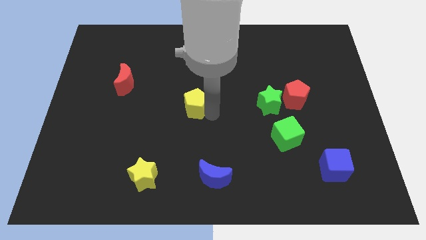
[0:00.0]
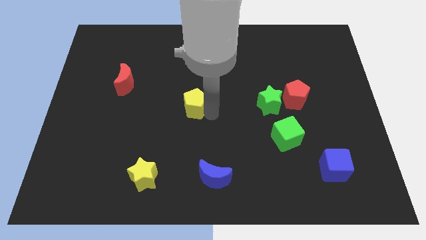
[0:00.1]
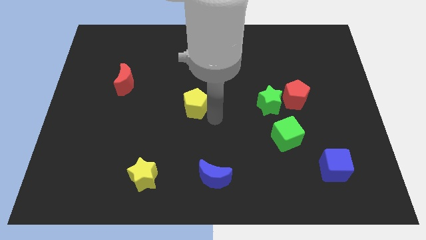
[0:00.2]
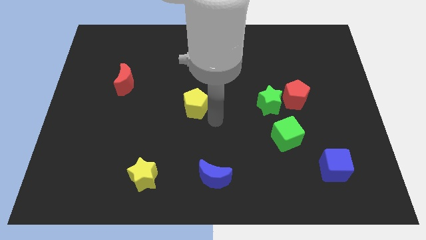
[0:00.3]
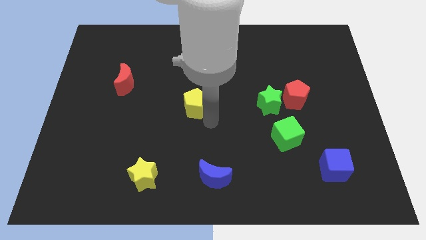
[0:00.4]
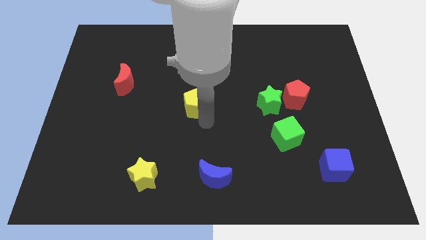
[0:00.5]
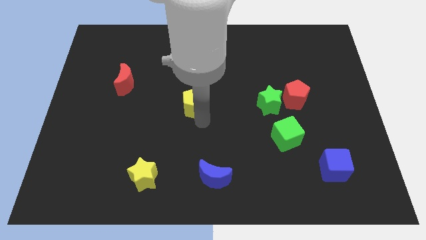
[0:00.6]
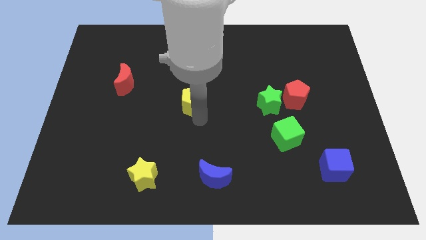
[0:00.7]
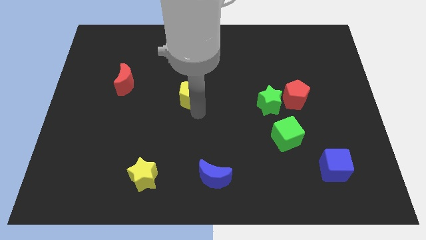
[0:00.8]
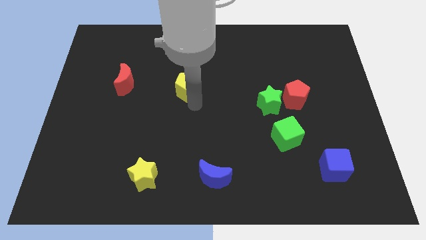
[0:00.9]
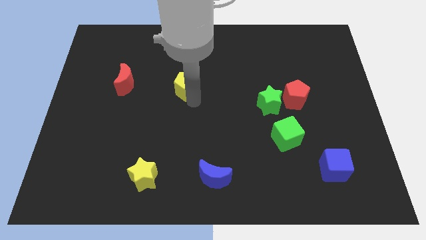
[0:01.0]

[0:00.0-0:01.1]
move the yellow pentagon right to the red moon

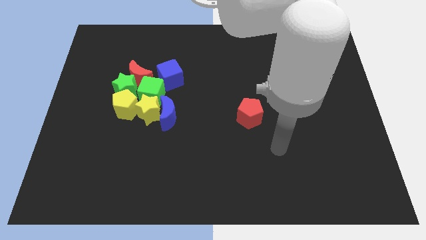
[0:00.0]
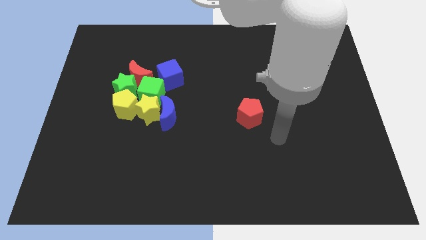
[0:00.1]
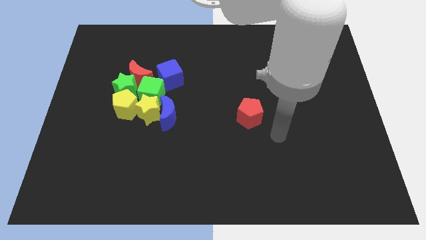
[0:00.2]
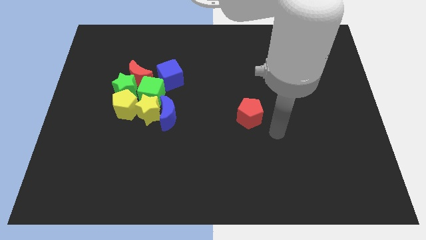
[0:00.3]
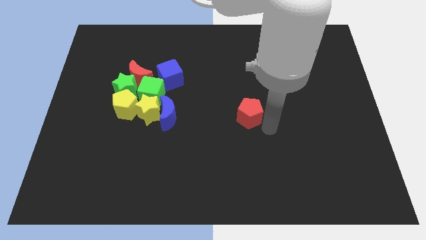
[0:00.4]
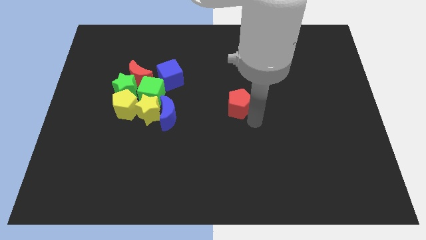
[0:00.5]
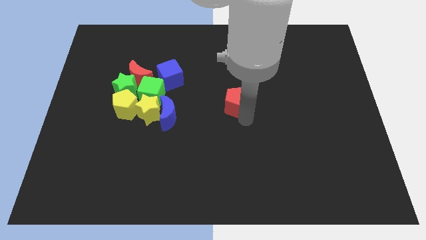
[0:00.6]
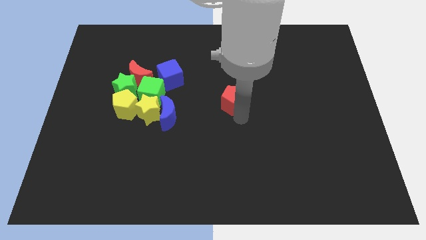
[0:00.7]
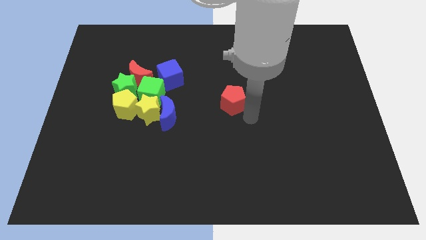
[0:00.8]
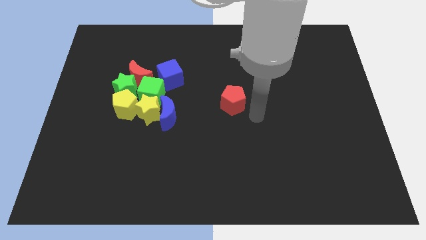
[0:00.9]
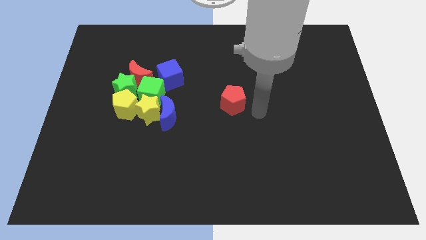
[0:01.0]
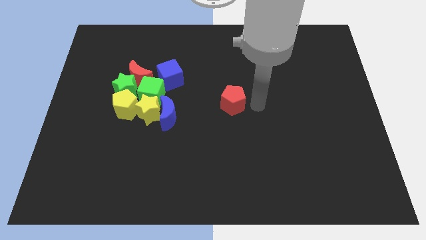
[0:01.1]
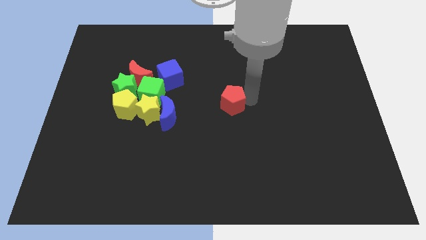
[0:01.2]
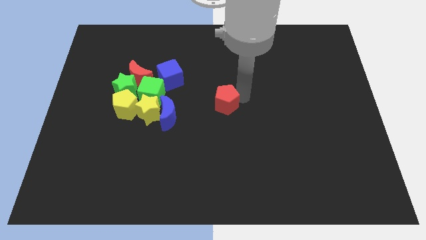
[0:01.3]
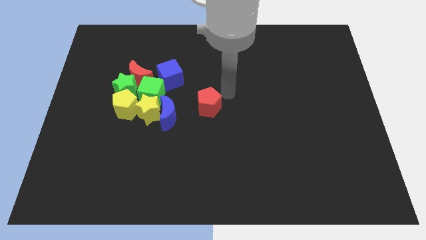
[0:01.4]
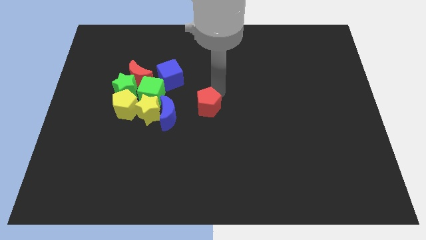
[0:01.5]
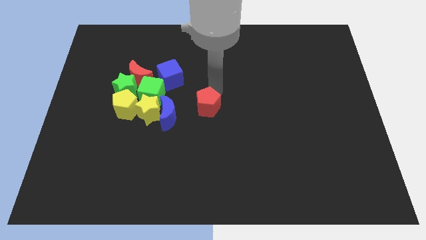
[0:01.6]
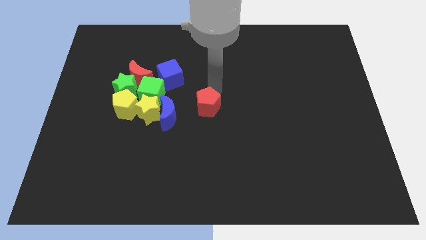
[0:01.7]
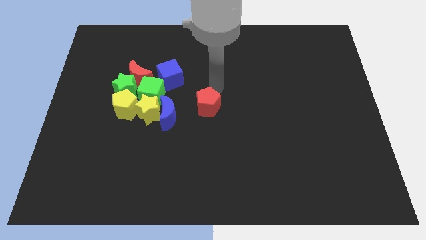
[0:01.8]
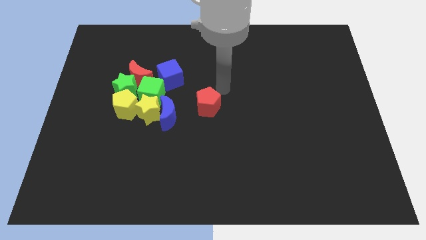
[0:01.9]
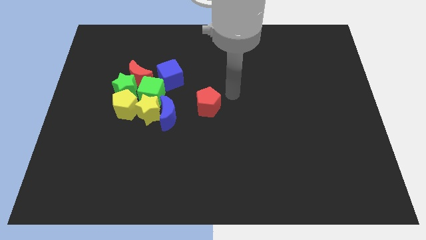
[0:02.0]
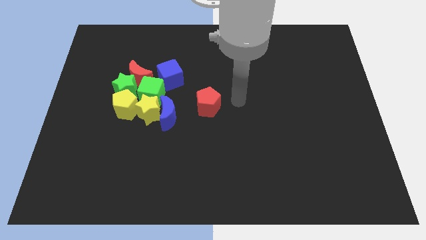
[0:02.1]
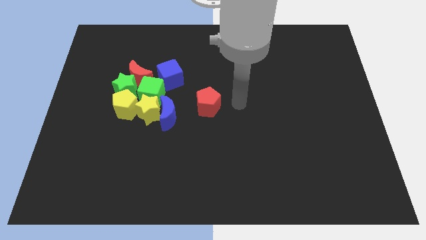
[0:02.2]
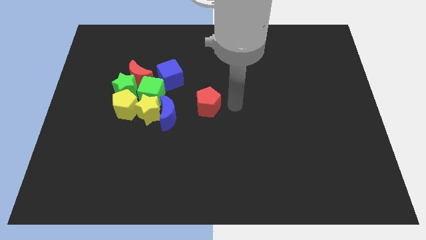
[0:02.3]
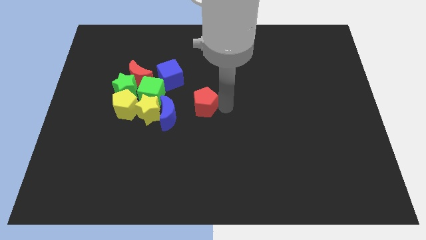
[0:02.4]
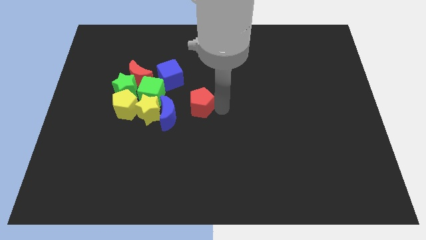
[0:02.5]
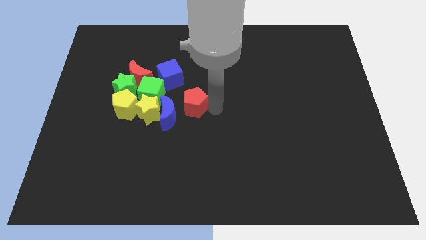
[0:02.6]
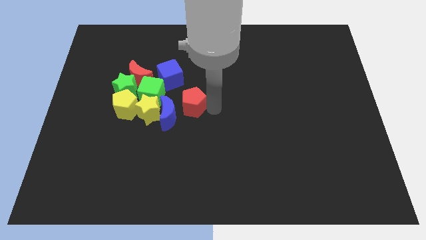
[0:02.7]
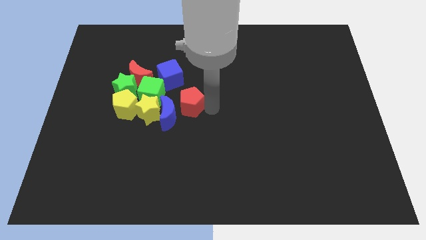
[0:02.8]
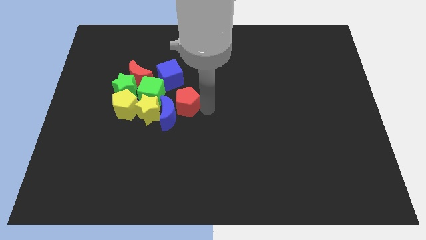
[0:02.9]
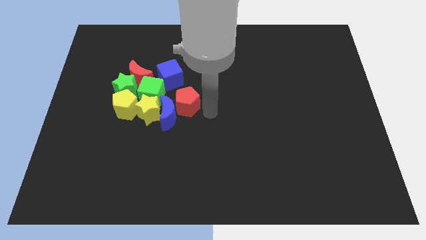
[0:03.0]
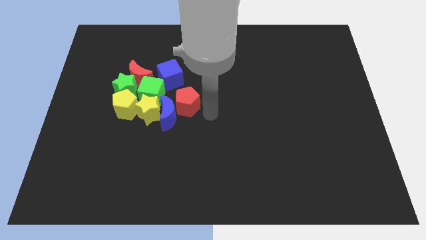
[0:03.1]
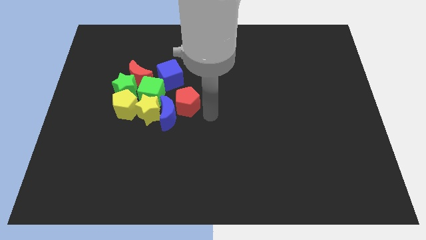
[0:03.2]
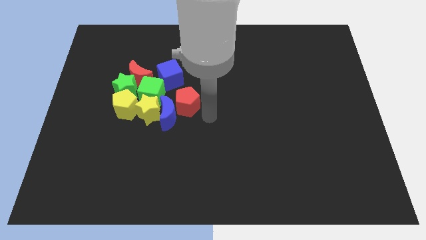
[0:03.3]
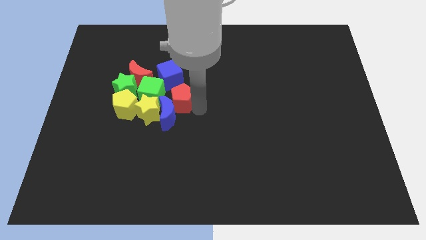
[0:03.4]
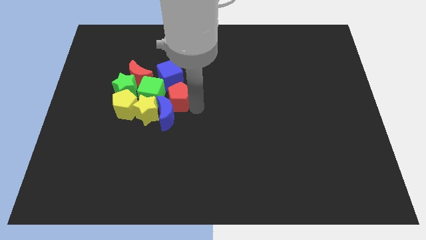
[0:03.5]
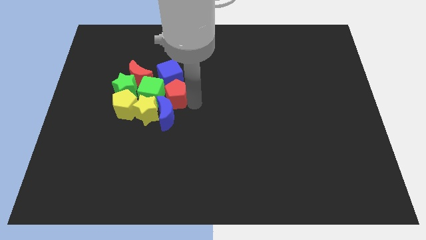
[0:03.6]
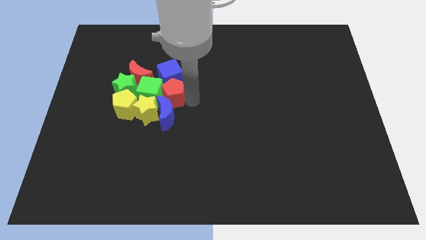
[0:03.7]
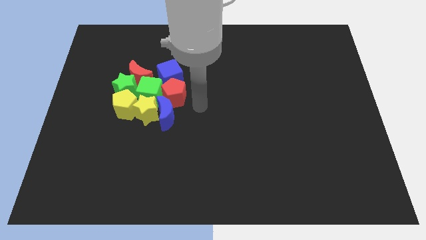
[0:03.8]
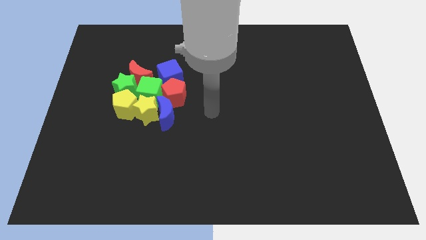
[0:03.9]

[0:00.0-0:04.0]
push the red pentagon into the group of blocks

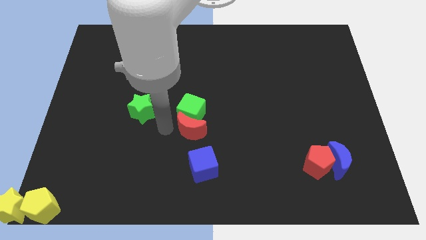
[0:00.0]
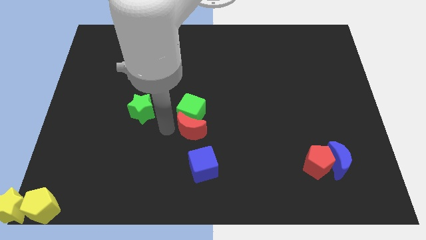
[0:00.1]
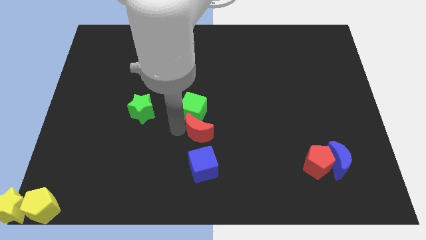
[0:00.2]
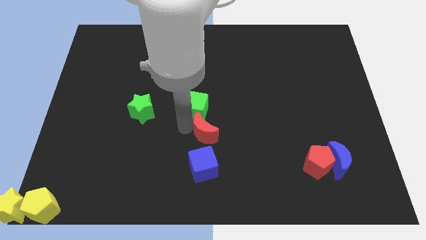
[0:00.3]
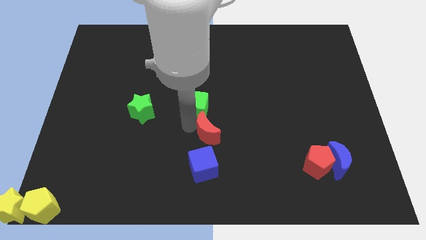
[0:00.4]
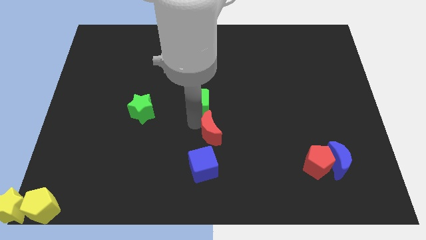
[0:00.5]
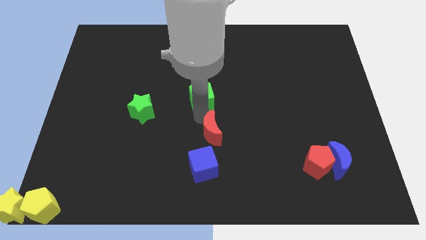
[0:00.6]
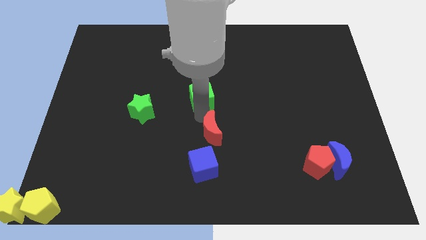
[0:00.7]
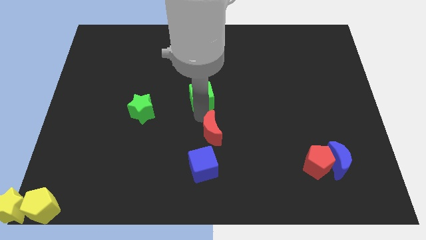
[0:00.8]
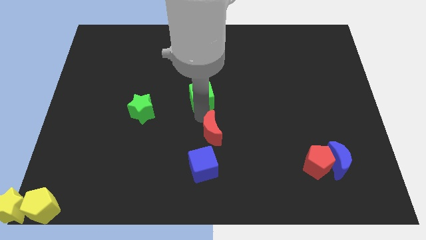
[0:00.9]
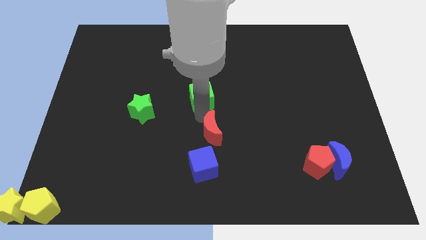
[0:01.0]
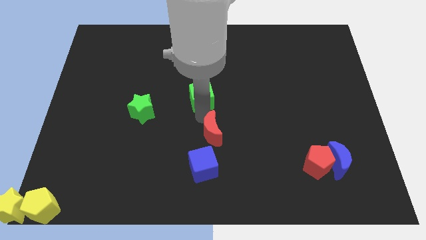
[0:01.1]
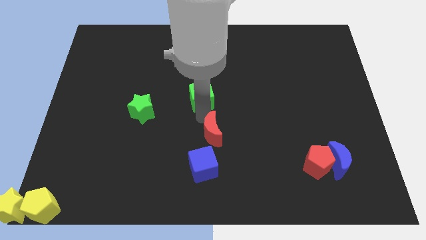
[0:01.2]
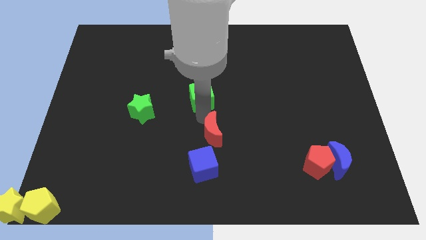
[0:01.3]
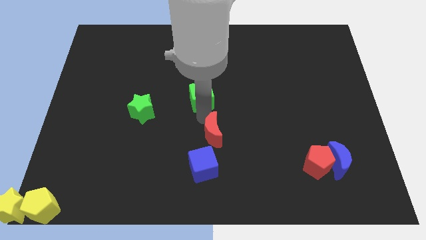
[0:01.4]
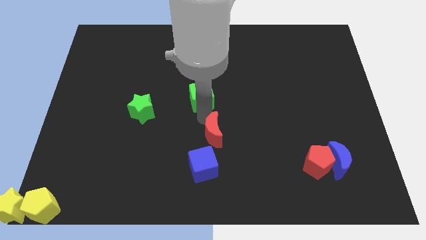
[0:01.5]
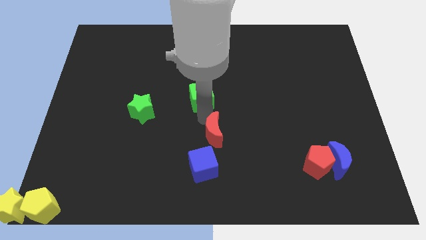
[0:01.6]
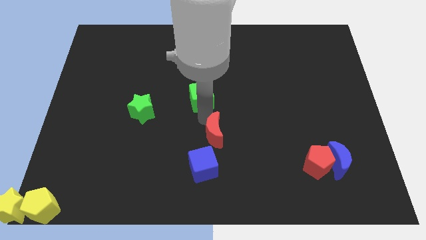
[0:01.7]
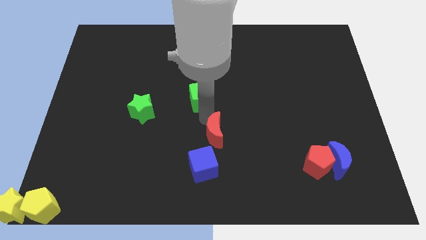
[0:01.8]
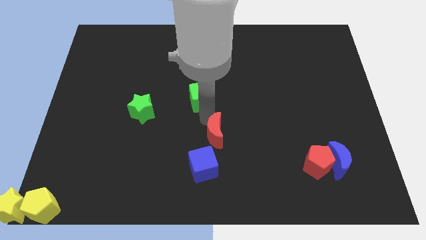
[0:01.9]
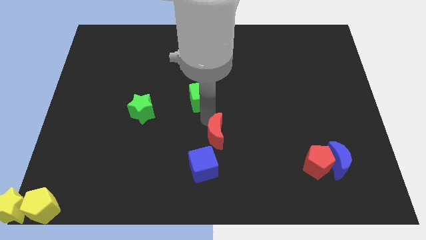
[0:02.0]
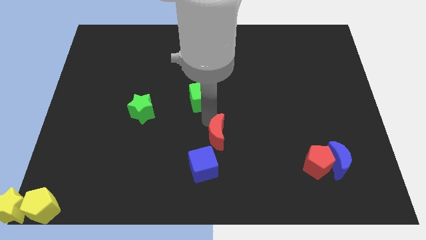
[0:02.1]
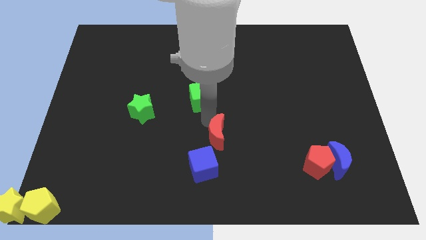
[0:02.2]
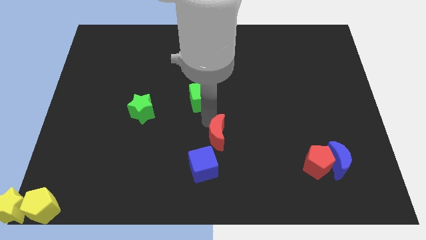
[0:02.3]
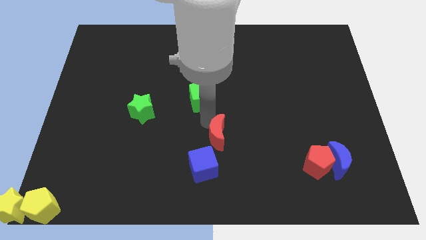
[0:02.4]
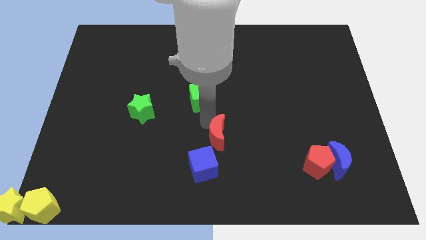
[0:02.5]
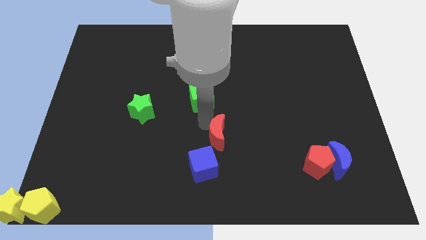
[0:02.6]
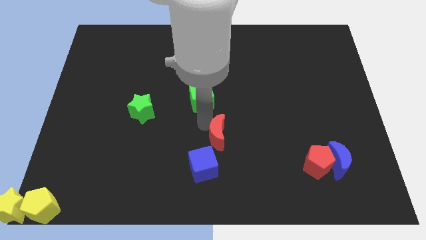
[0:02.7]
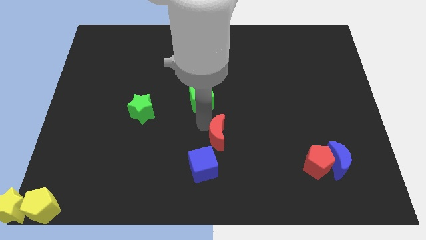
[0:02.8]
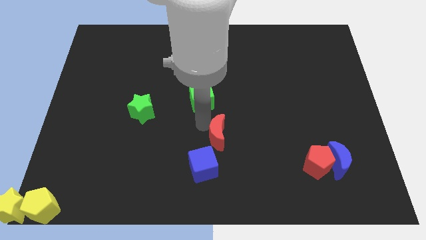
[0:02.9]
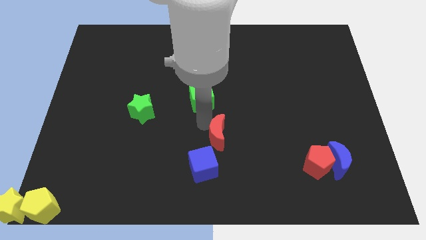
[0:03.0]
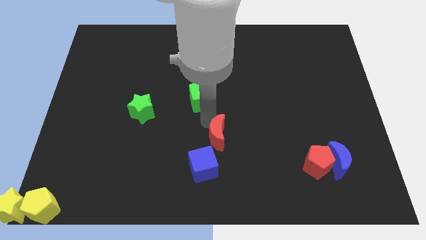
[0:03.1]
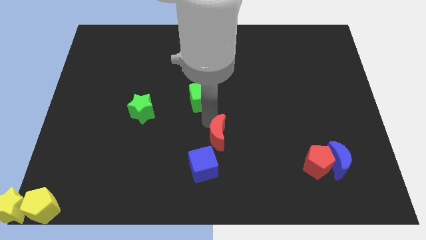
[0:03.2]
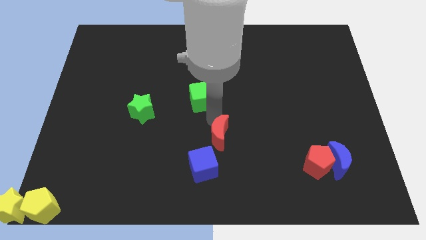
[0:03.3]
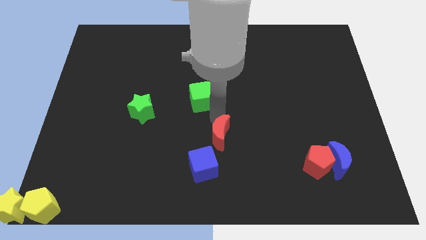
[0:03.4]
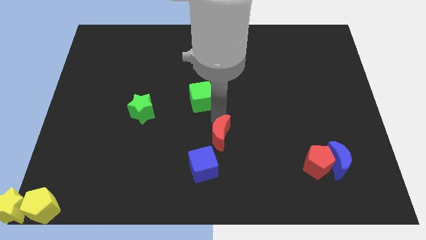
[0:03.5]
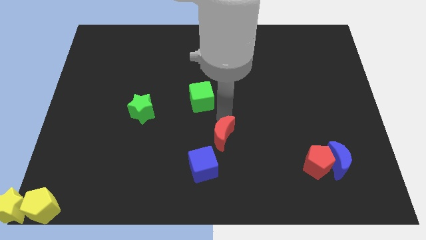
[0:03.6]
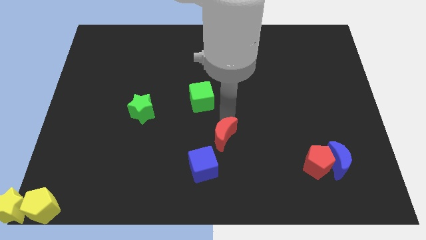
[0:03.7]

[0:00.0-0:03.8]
separate the green cube and red moon

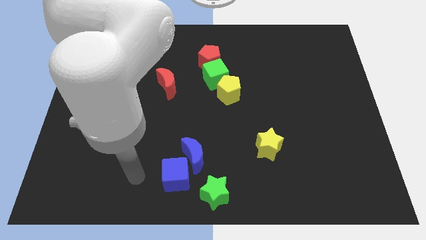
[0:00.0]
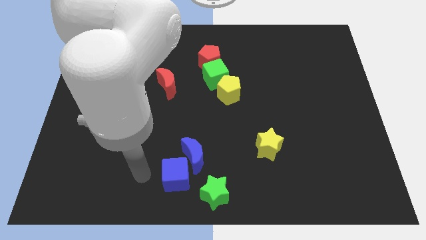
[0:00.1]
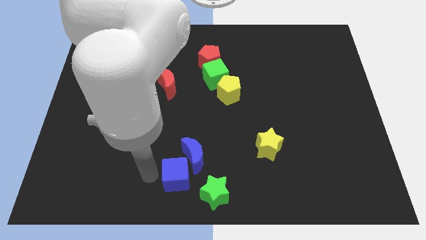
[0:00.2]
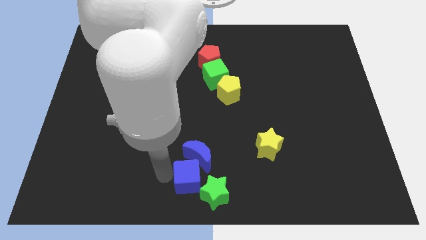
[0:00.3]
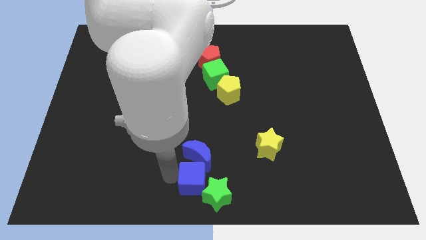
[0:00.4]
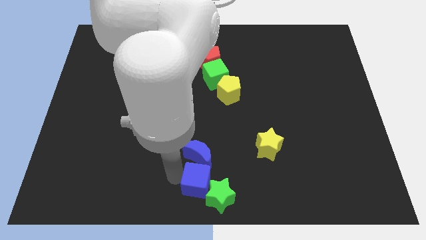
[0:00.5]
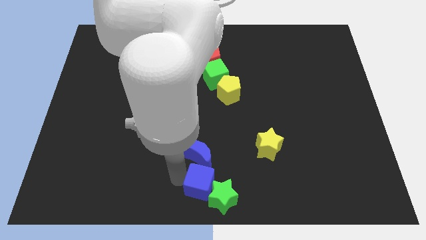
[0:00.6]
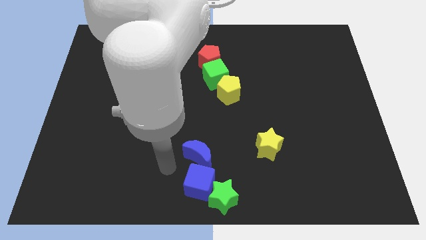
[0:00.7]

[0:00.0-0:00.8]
push the blue cube into the green star
